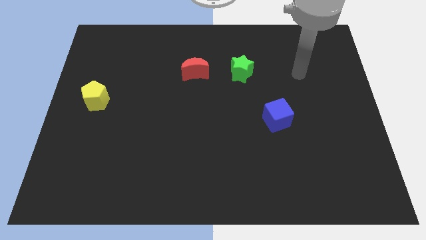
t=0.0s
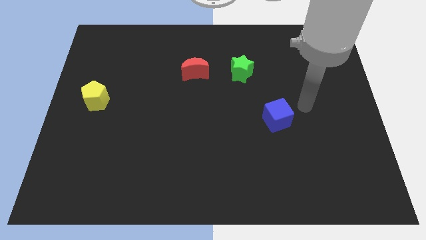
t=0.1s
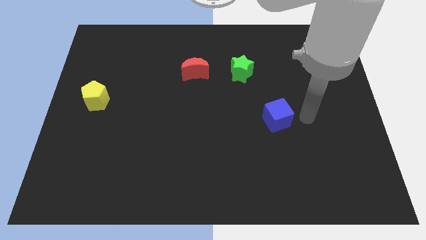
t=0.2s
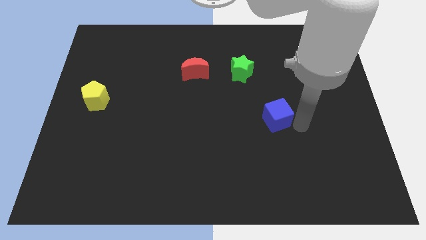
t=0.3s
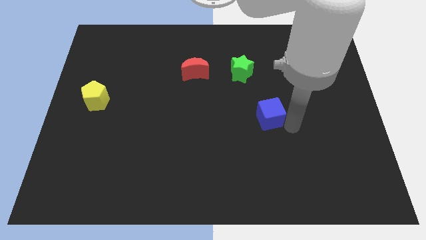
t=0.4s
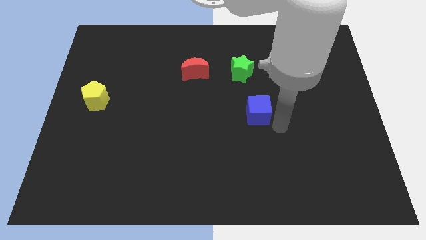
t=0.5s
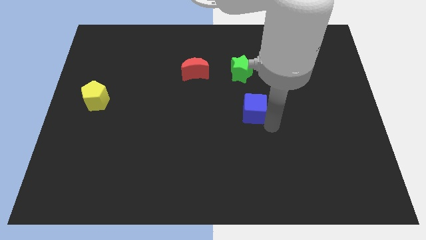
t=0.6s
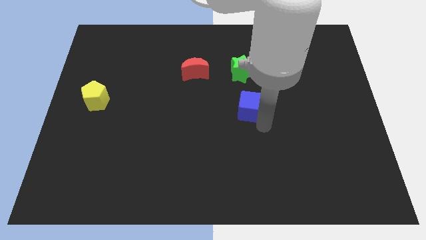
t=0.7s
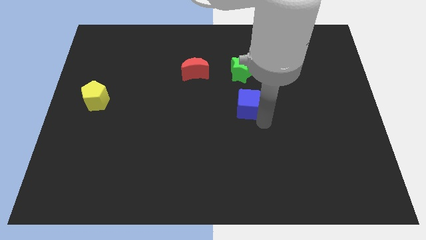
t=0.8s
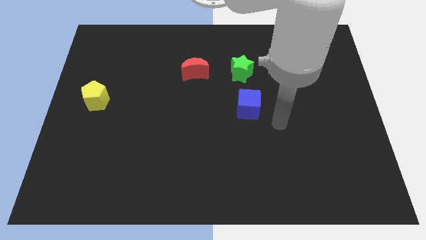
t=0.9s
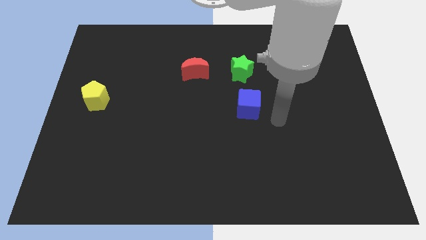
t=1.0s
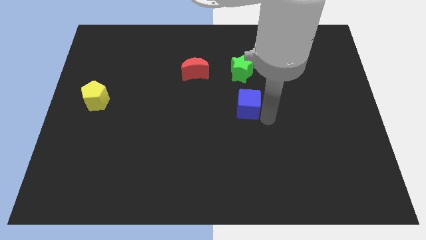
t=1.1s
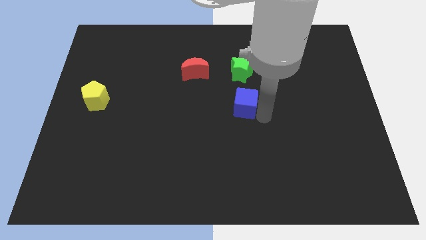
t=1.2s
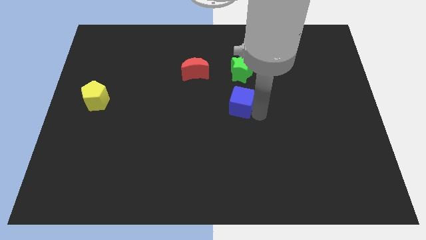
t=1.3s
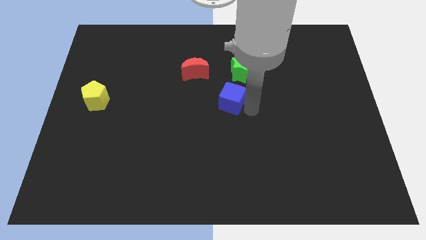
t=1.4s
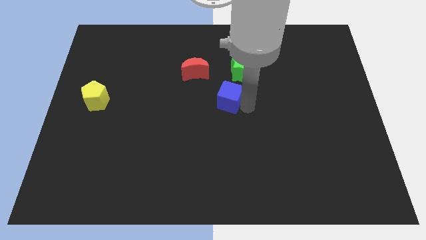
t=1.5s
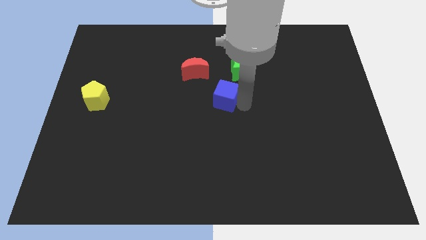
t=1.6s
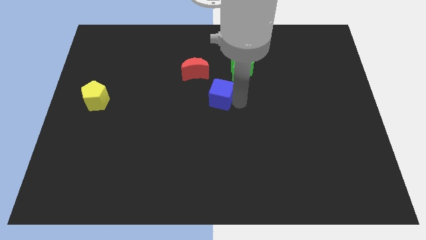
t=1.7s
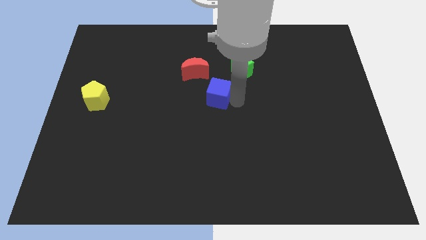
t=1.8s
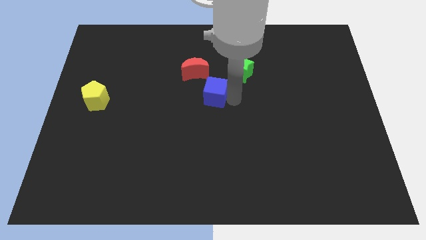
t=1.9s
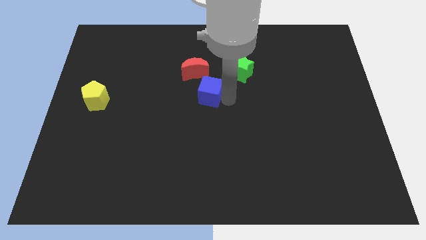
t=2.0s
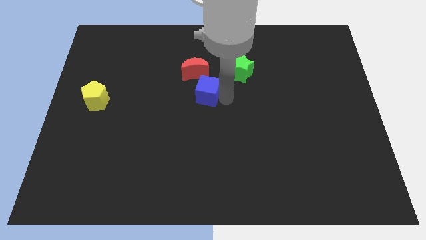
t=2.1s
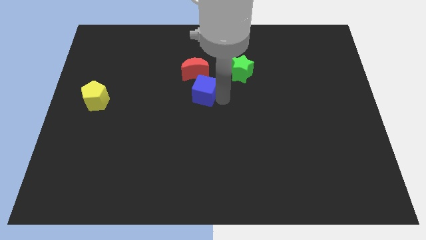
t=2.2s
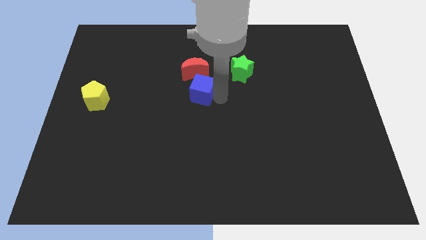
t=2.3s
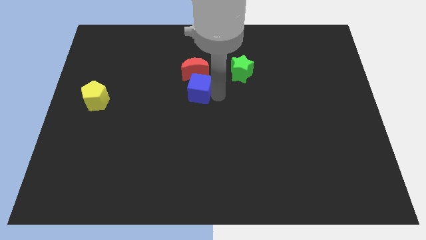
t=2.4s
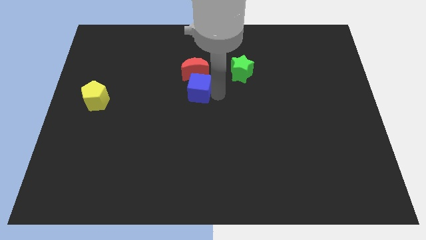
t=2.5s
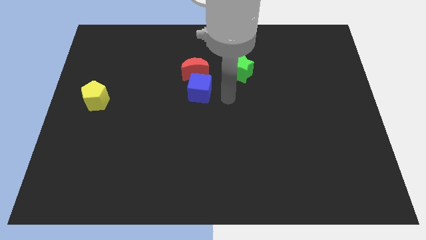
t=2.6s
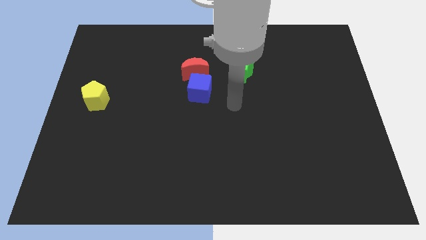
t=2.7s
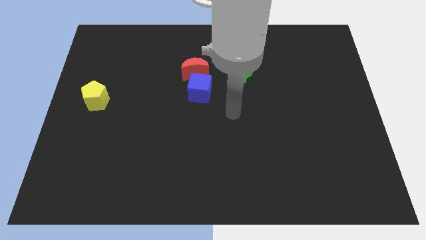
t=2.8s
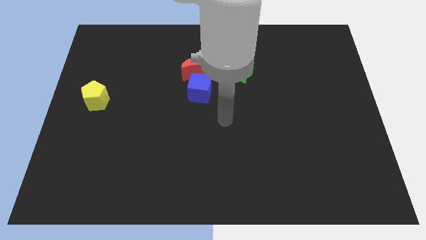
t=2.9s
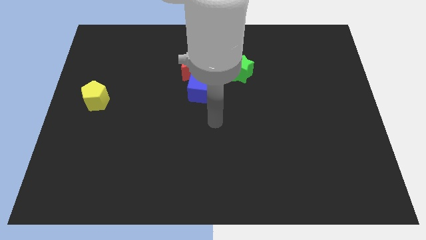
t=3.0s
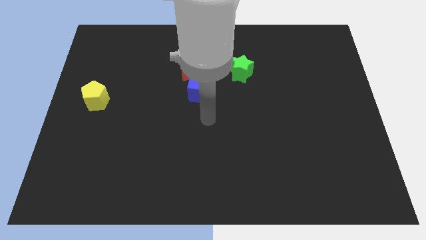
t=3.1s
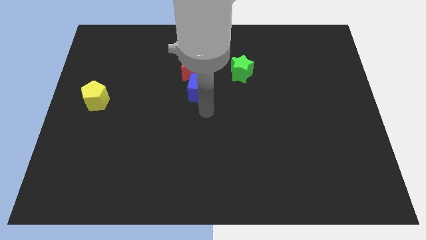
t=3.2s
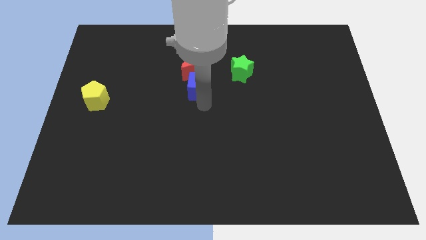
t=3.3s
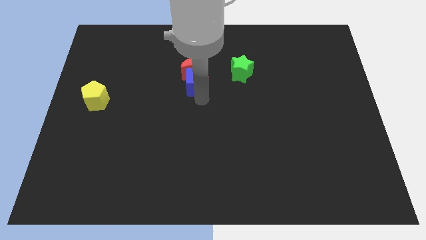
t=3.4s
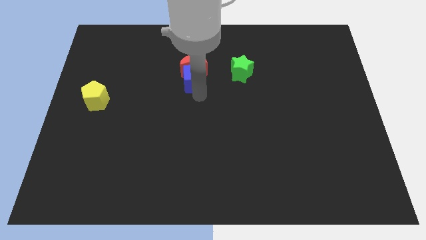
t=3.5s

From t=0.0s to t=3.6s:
push the blue block close to the red moon

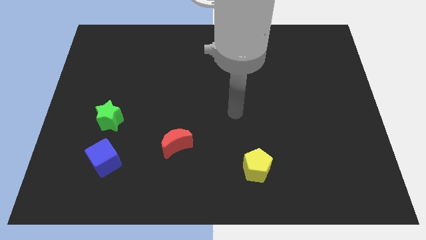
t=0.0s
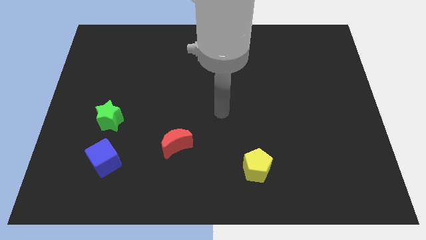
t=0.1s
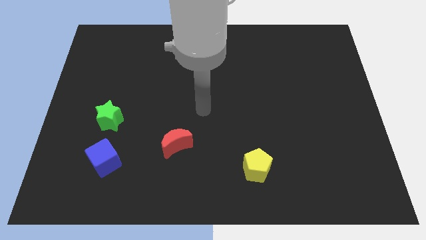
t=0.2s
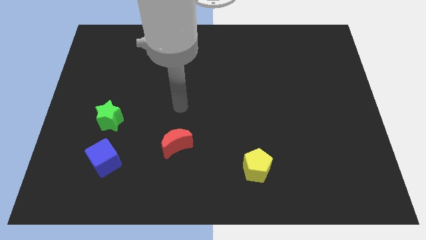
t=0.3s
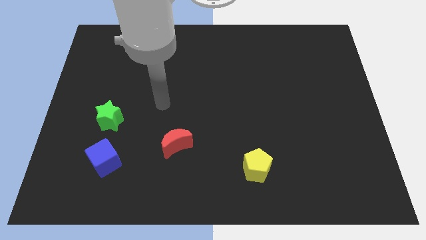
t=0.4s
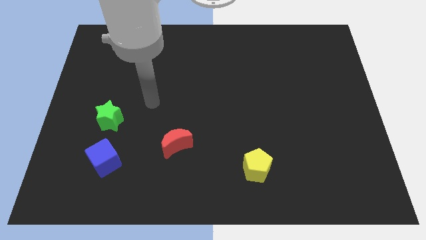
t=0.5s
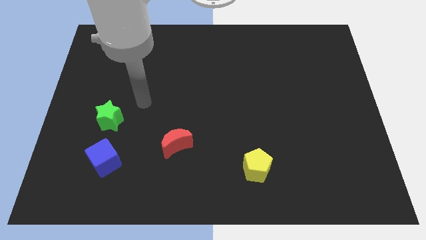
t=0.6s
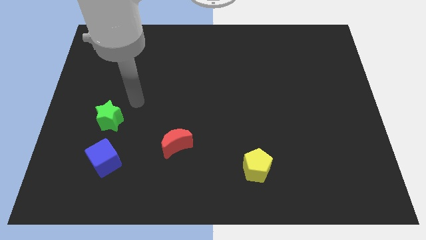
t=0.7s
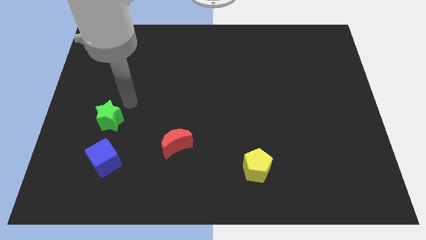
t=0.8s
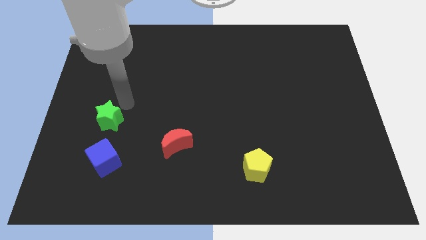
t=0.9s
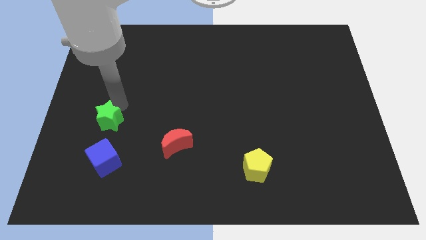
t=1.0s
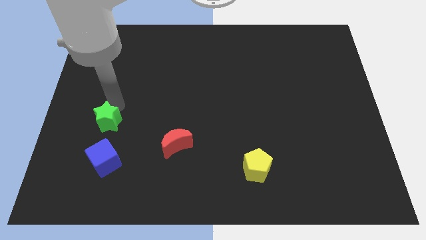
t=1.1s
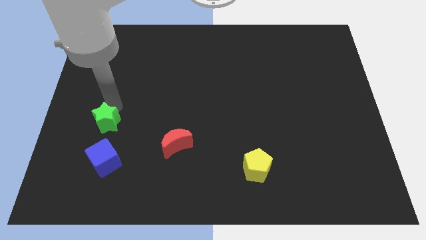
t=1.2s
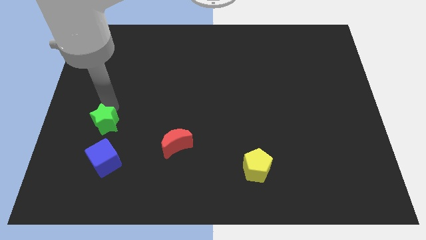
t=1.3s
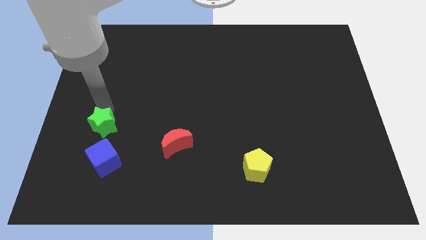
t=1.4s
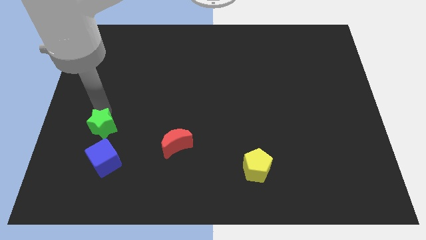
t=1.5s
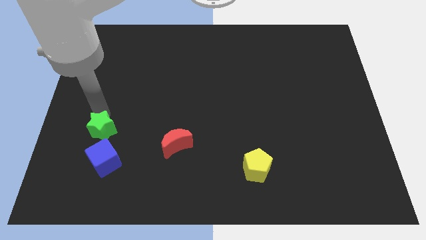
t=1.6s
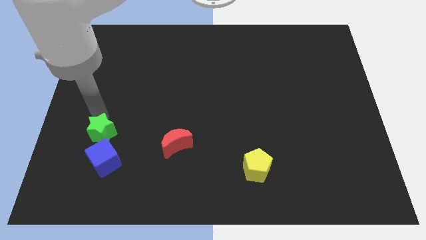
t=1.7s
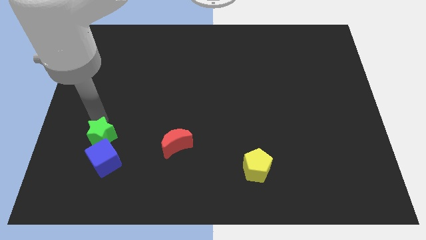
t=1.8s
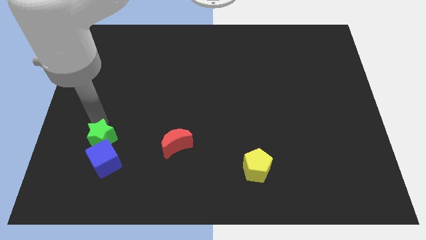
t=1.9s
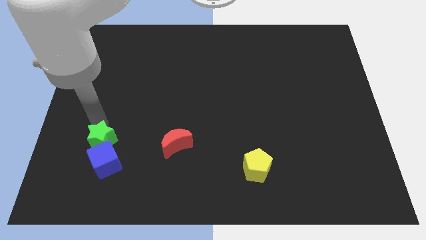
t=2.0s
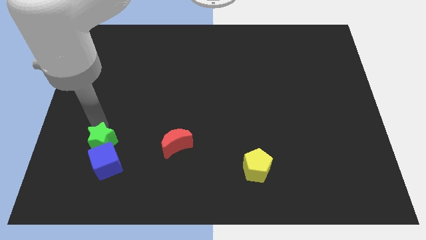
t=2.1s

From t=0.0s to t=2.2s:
slide the green star close to the blue block

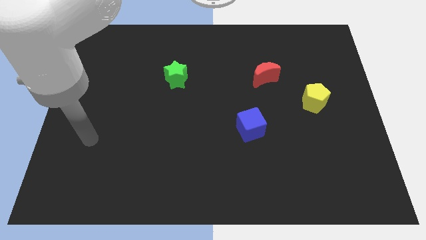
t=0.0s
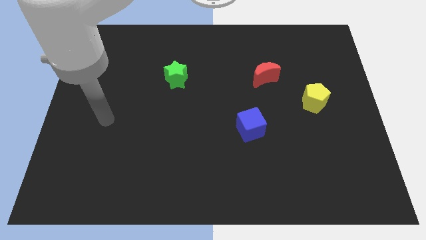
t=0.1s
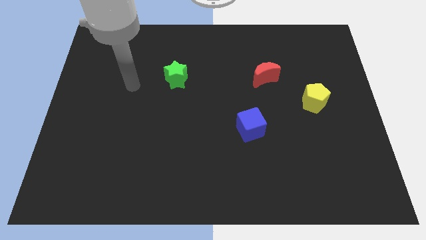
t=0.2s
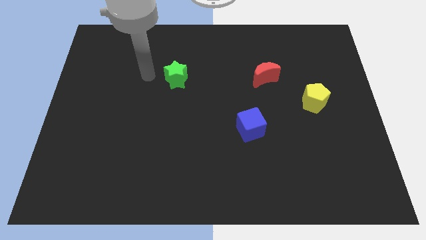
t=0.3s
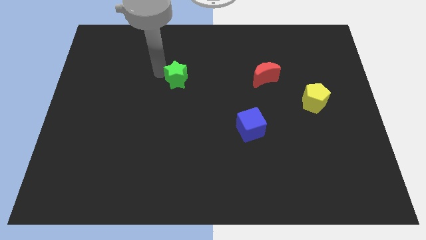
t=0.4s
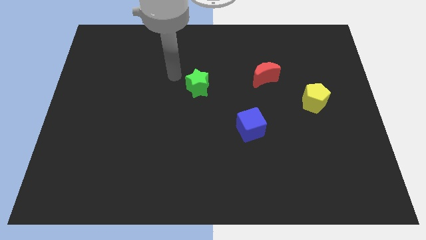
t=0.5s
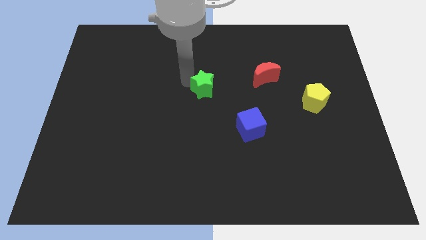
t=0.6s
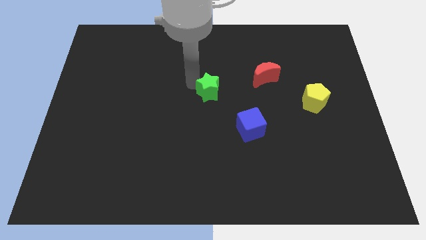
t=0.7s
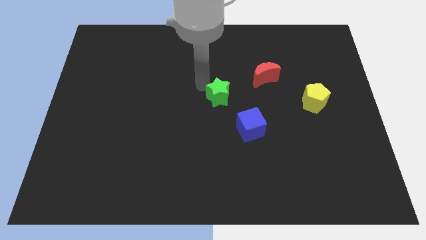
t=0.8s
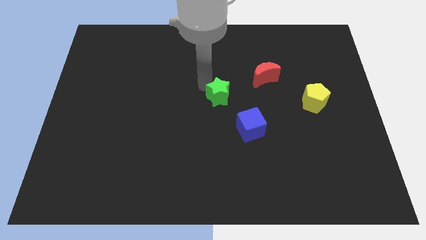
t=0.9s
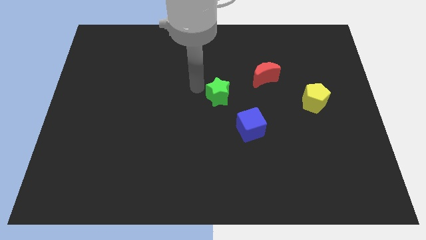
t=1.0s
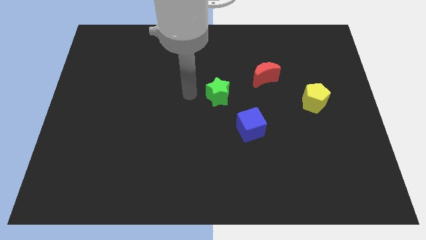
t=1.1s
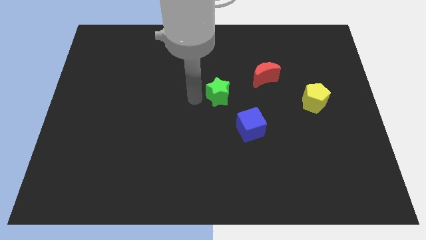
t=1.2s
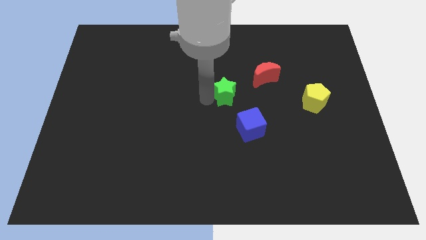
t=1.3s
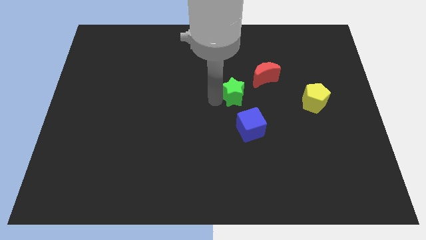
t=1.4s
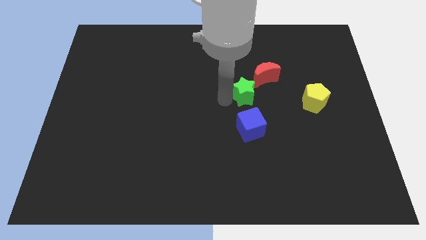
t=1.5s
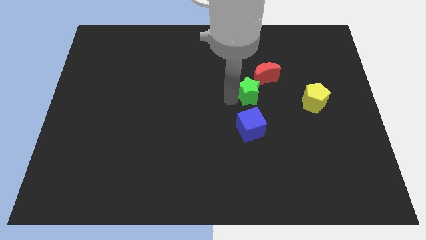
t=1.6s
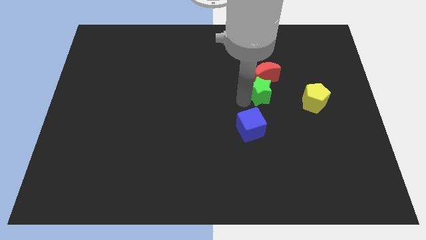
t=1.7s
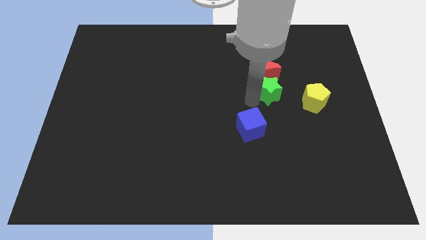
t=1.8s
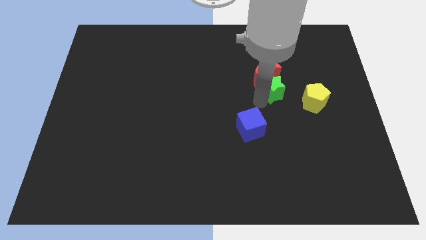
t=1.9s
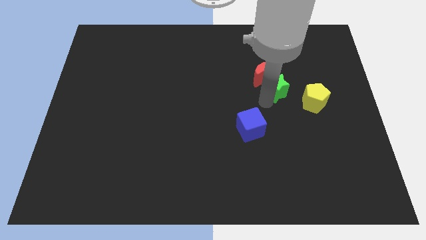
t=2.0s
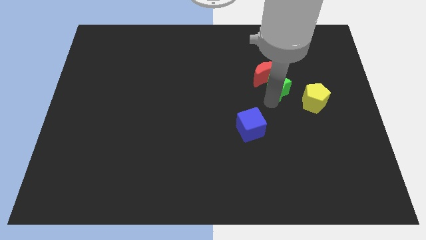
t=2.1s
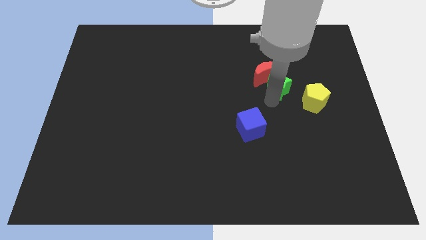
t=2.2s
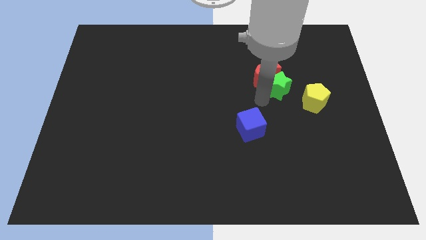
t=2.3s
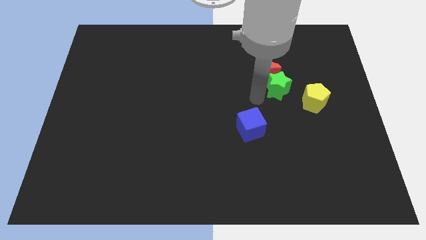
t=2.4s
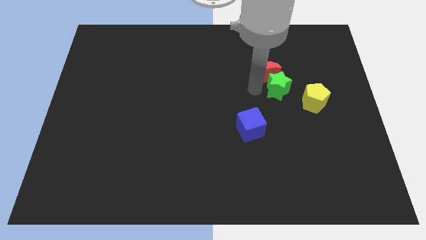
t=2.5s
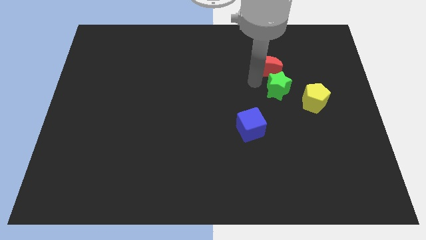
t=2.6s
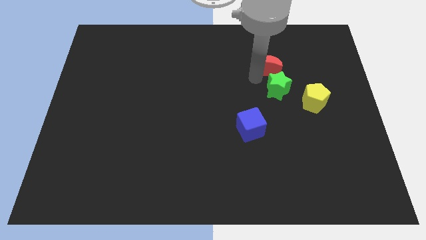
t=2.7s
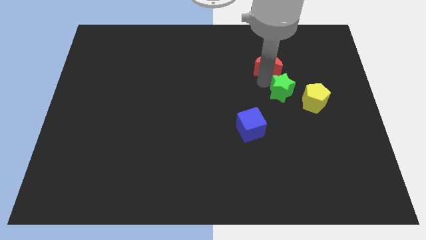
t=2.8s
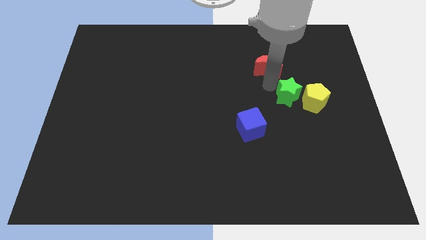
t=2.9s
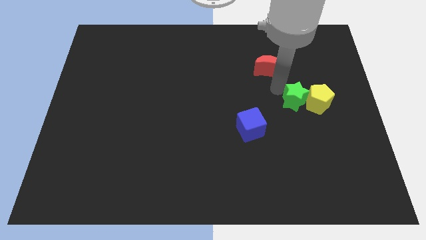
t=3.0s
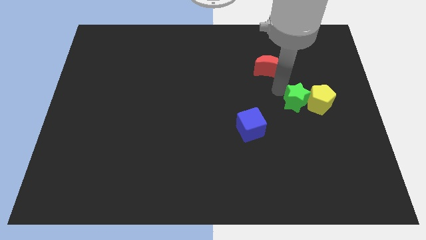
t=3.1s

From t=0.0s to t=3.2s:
push the star towards the yellow block
